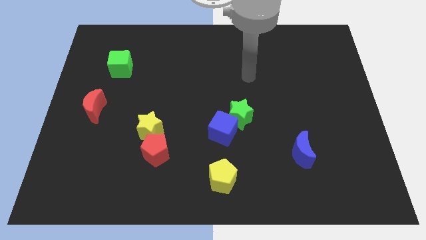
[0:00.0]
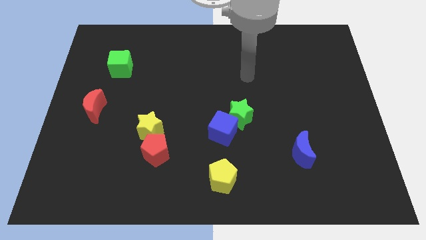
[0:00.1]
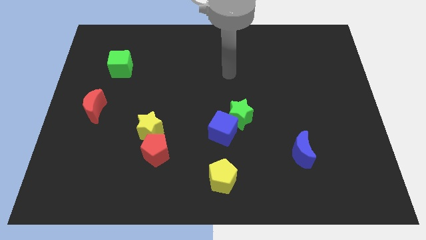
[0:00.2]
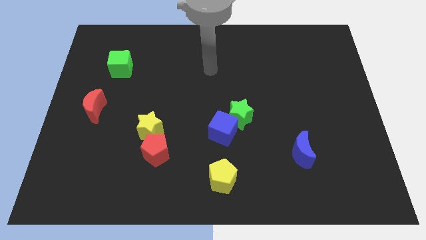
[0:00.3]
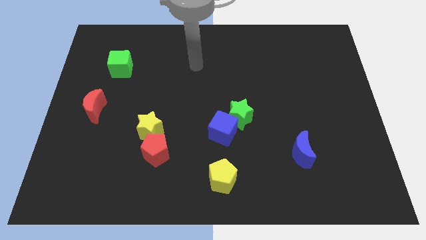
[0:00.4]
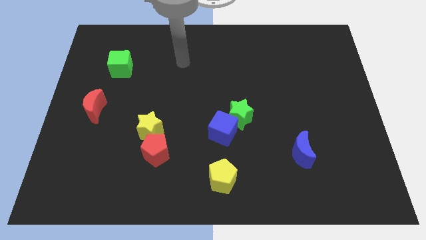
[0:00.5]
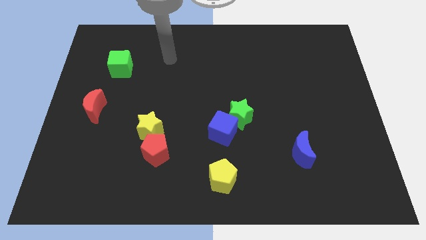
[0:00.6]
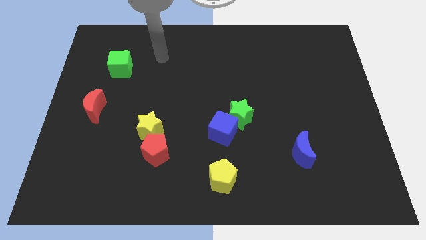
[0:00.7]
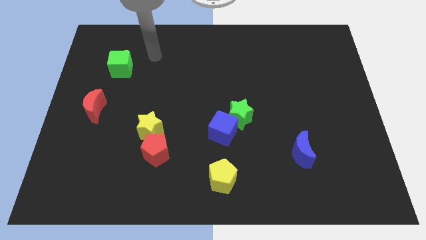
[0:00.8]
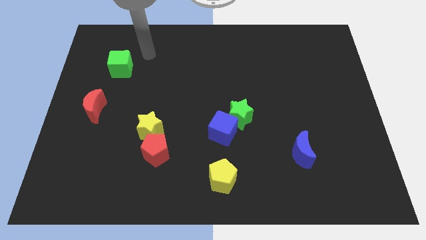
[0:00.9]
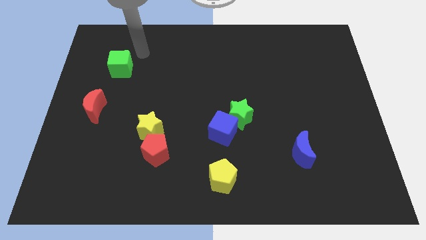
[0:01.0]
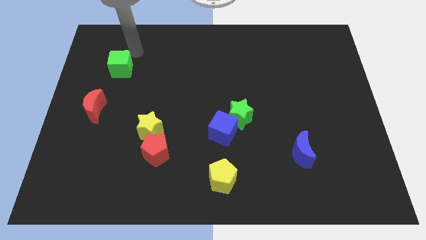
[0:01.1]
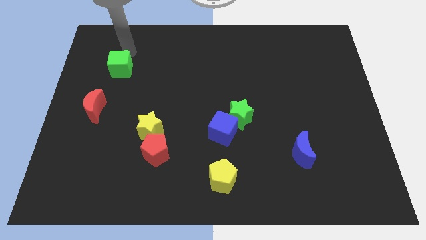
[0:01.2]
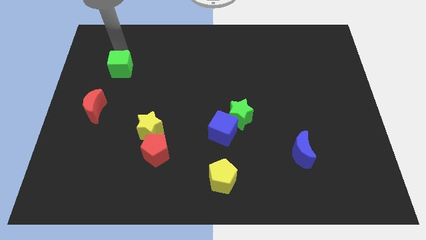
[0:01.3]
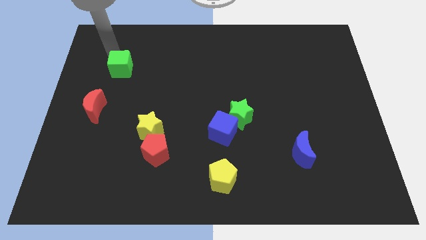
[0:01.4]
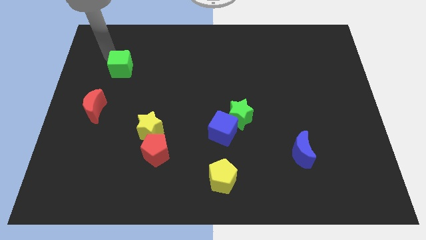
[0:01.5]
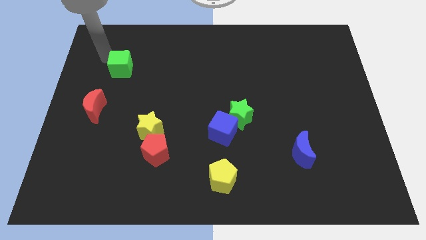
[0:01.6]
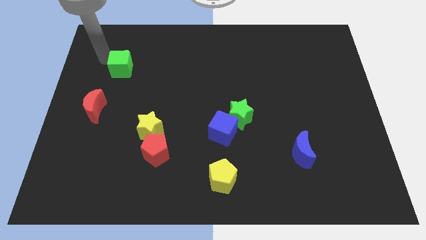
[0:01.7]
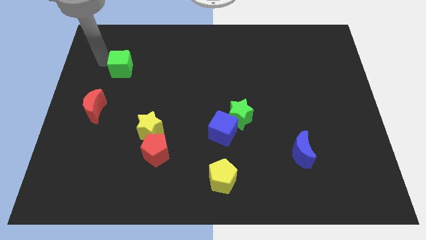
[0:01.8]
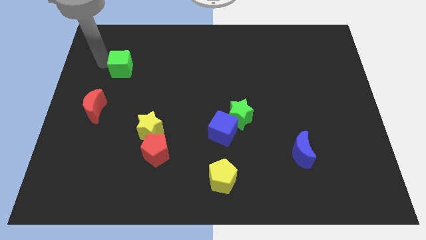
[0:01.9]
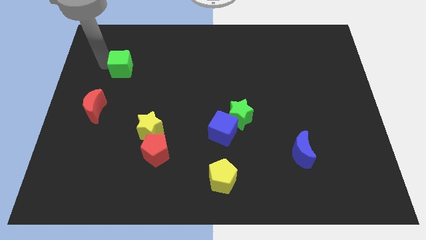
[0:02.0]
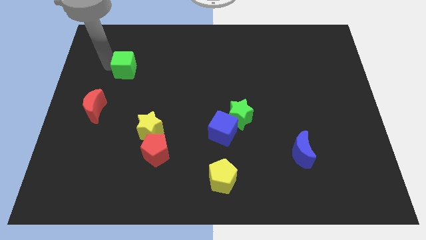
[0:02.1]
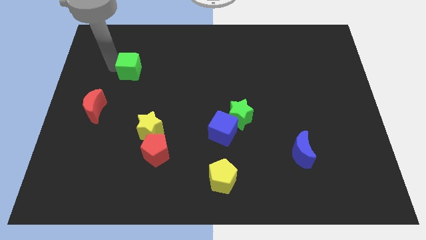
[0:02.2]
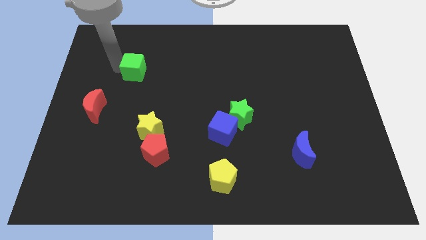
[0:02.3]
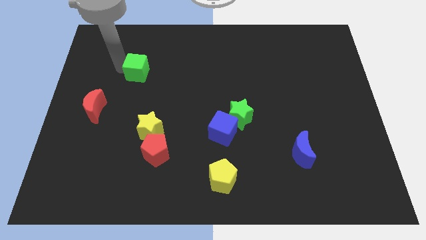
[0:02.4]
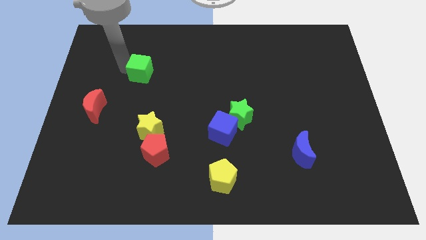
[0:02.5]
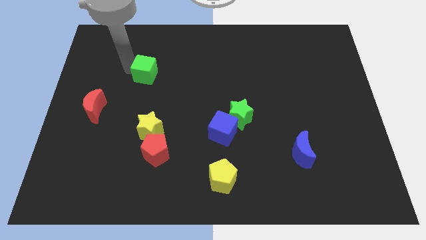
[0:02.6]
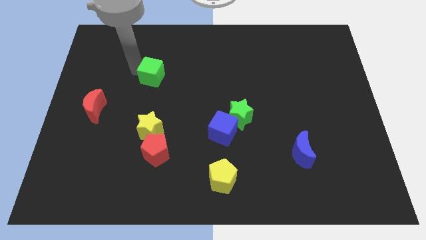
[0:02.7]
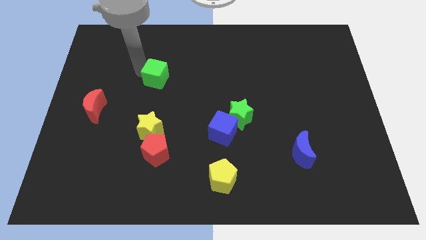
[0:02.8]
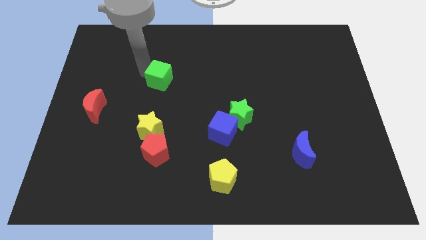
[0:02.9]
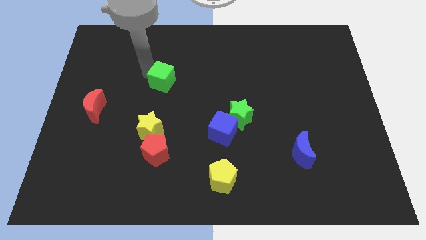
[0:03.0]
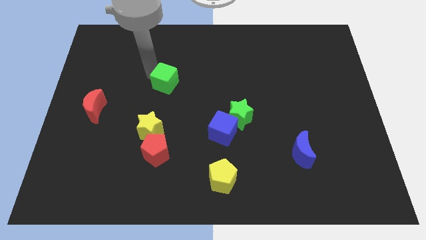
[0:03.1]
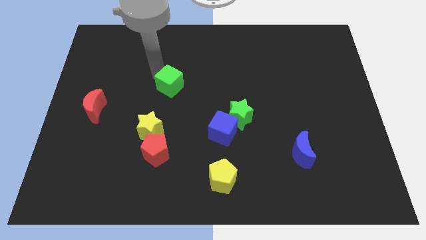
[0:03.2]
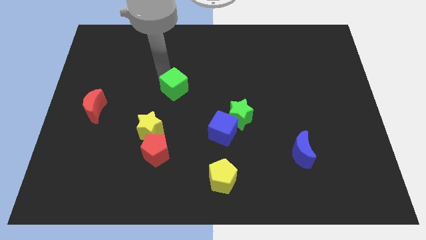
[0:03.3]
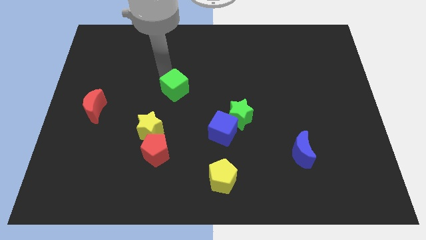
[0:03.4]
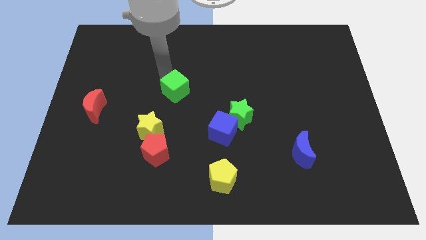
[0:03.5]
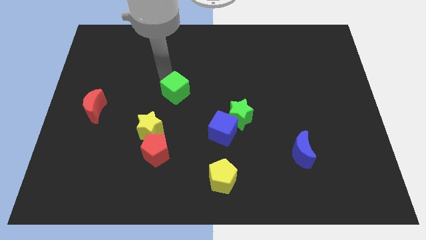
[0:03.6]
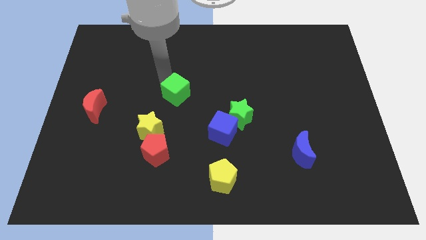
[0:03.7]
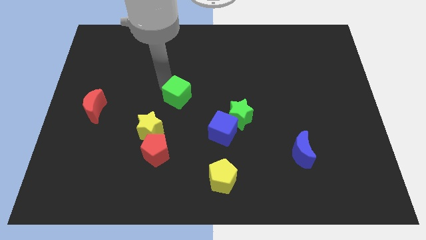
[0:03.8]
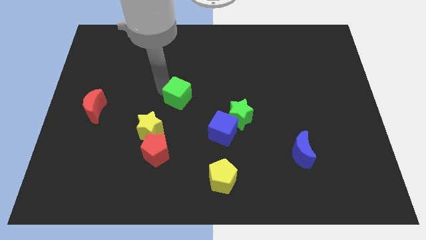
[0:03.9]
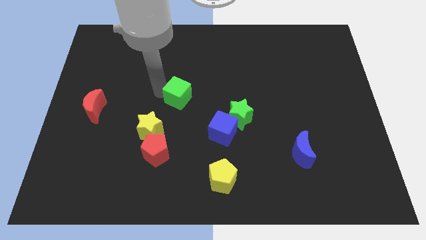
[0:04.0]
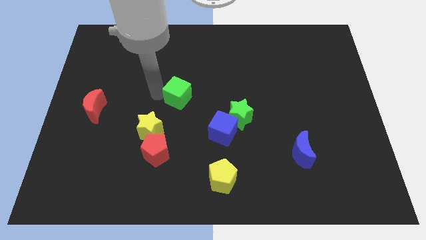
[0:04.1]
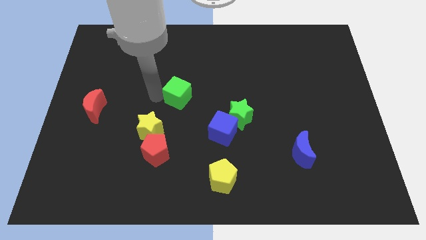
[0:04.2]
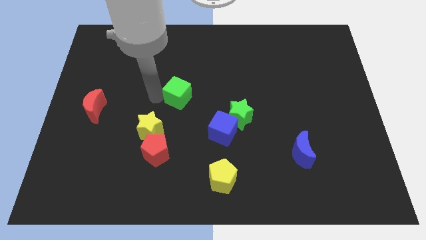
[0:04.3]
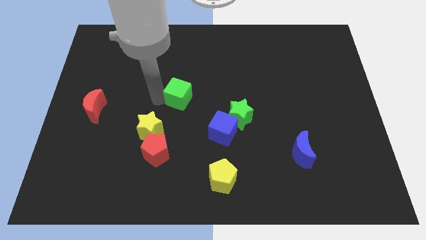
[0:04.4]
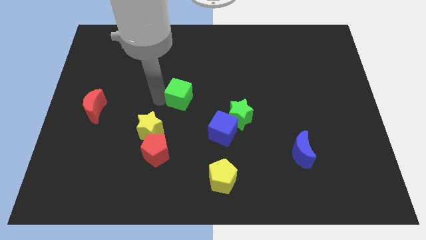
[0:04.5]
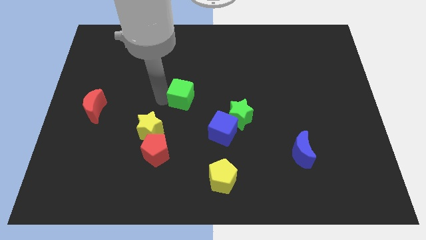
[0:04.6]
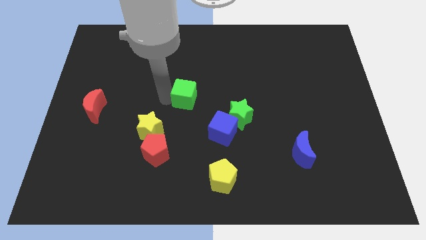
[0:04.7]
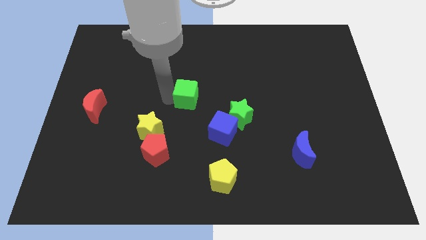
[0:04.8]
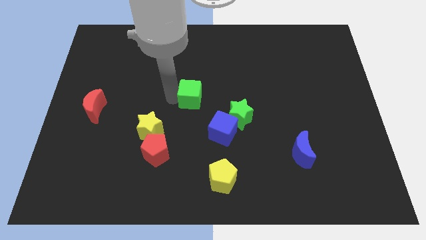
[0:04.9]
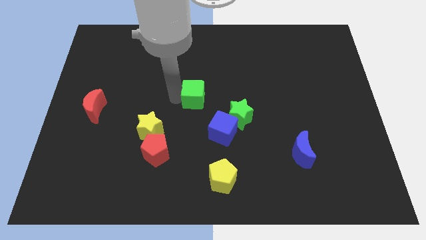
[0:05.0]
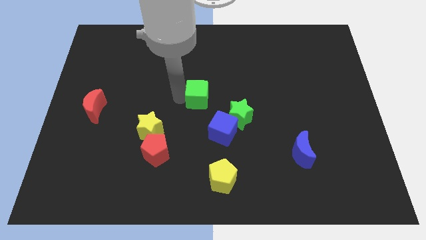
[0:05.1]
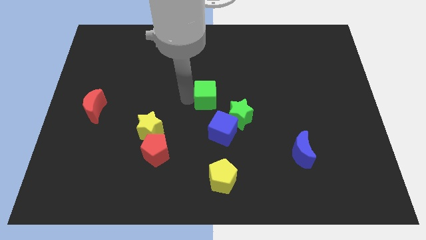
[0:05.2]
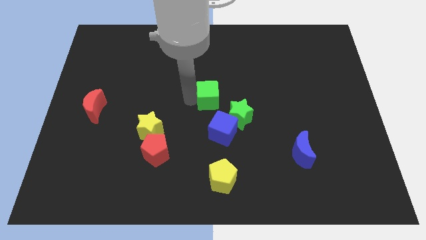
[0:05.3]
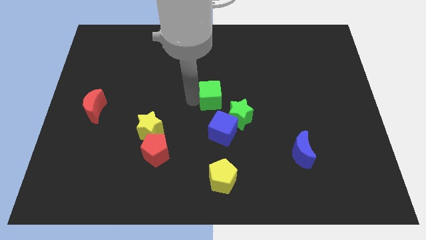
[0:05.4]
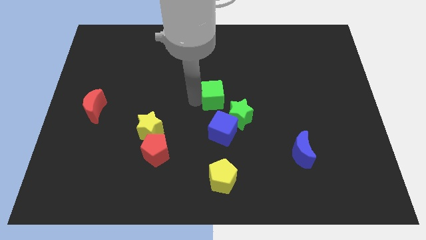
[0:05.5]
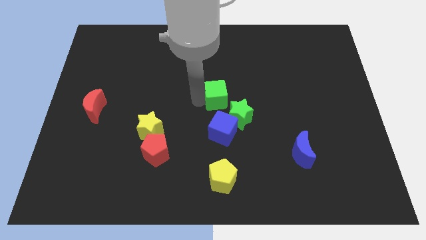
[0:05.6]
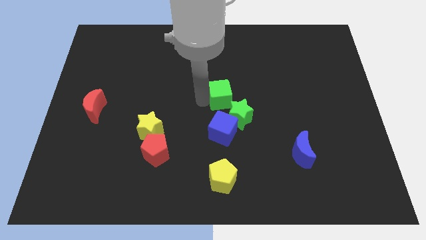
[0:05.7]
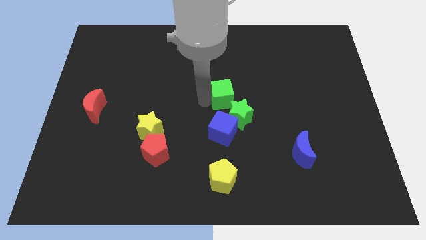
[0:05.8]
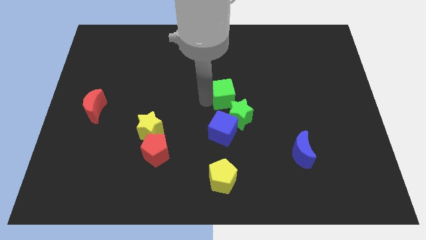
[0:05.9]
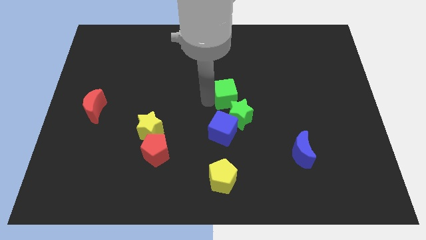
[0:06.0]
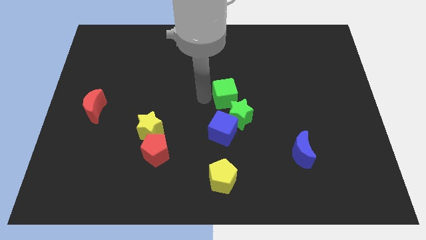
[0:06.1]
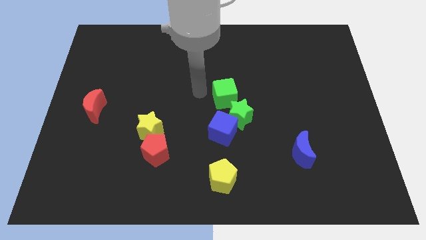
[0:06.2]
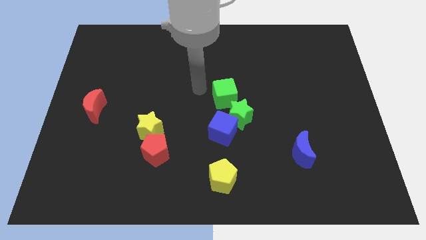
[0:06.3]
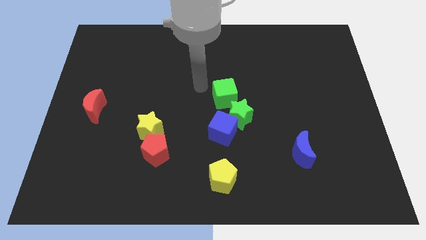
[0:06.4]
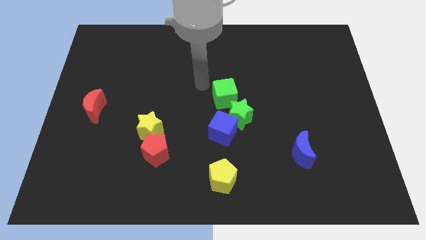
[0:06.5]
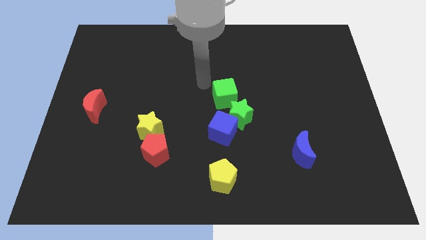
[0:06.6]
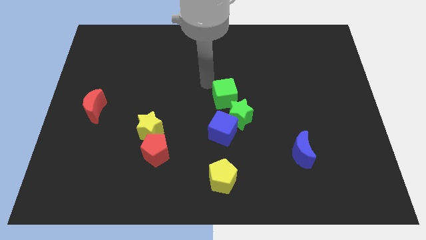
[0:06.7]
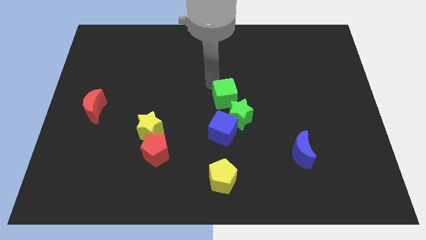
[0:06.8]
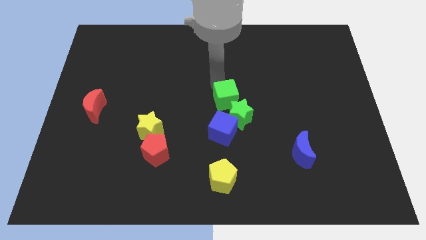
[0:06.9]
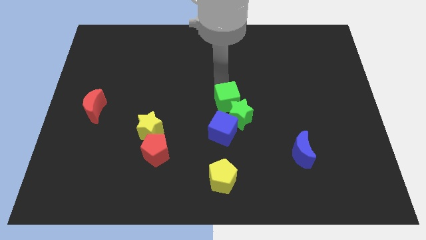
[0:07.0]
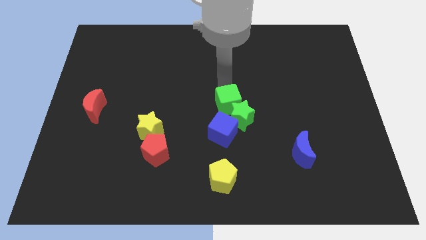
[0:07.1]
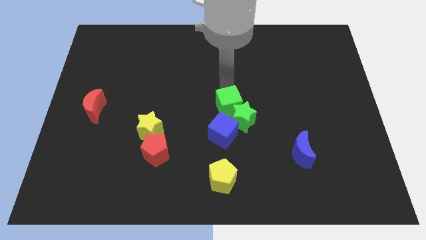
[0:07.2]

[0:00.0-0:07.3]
put the green cube next to the green star

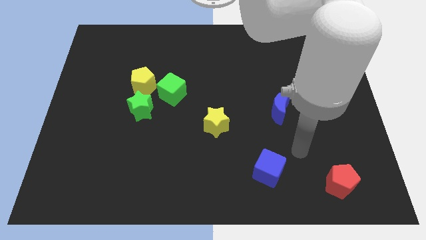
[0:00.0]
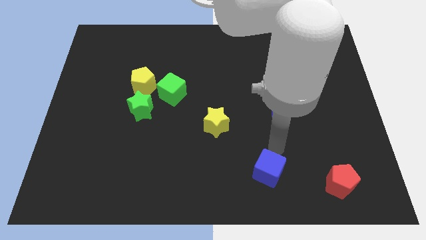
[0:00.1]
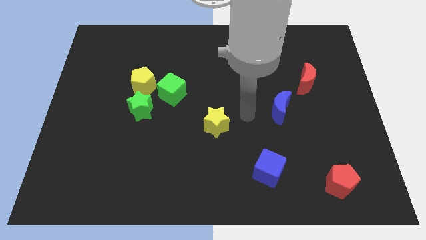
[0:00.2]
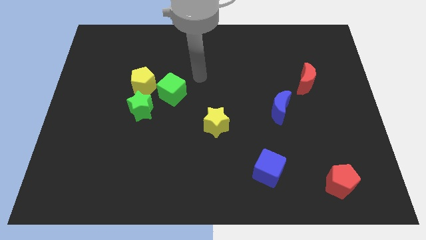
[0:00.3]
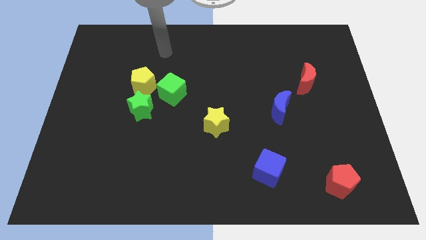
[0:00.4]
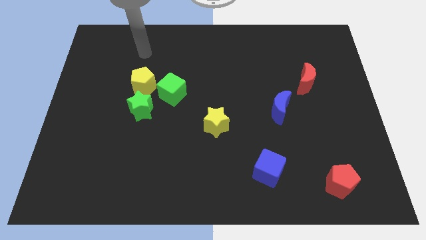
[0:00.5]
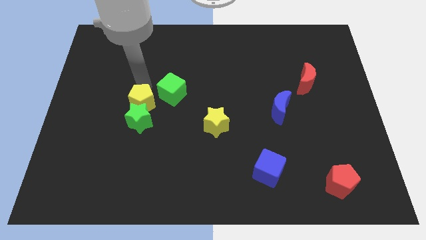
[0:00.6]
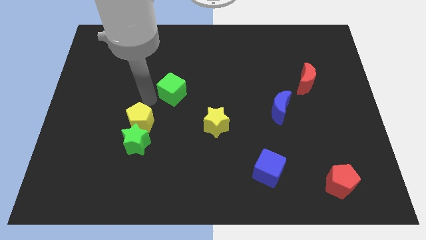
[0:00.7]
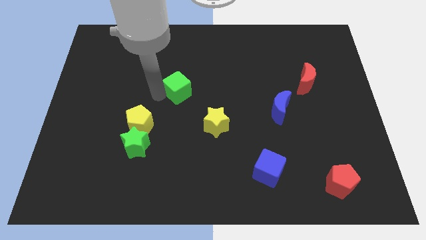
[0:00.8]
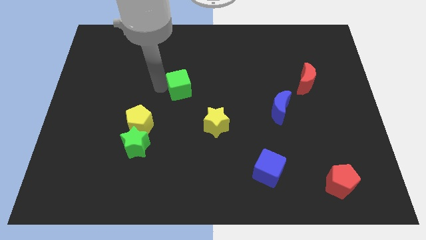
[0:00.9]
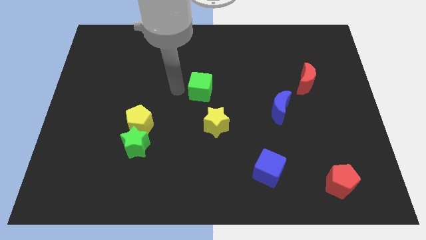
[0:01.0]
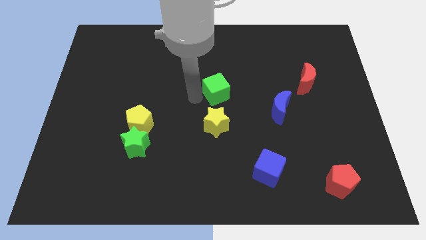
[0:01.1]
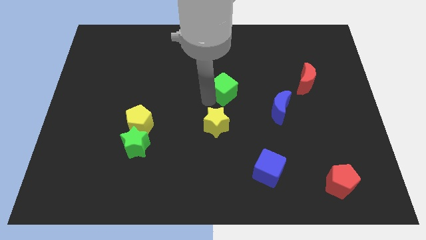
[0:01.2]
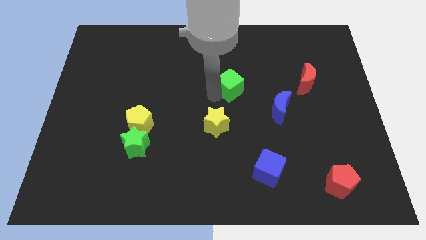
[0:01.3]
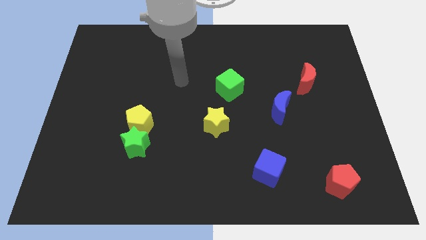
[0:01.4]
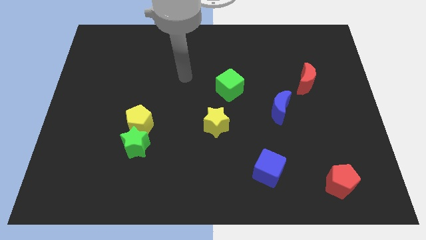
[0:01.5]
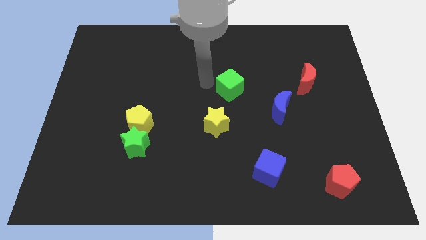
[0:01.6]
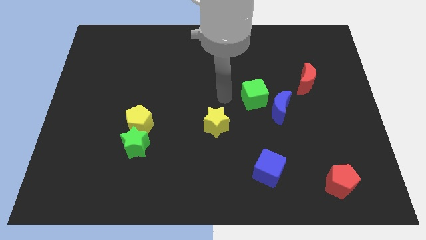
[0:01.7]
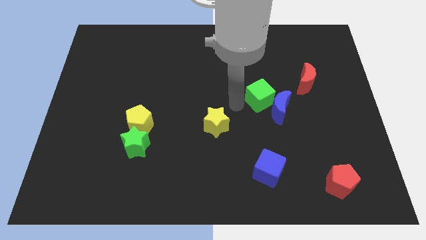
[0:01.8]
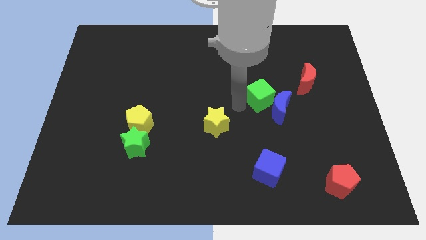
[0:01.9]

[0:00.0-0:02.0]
slide the green cube to the blue moon
